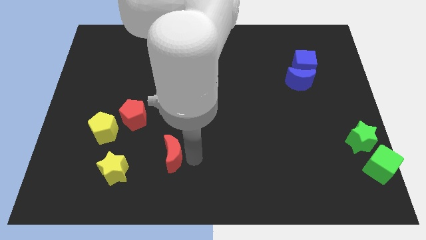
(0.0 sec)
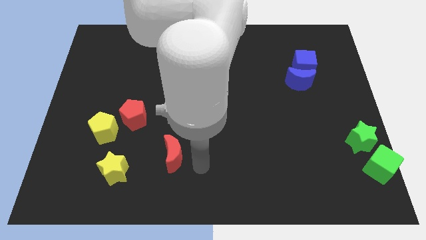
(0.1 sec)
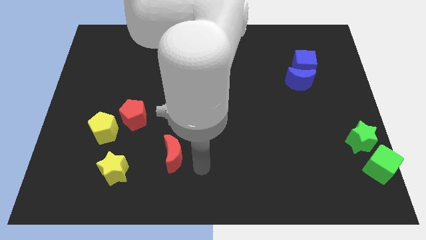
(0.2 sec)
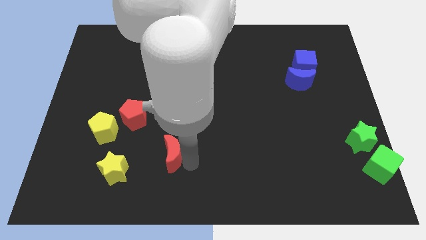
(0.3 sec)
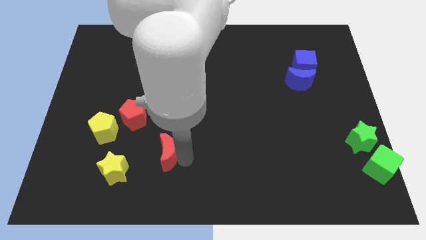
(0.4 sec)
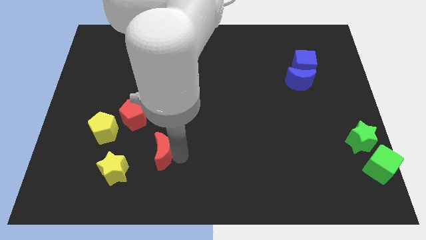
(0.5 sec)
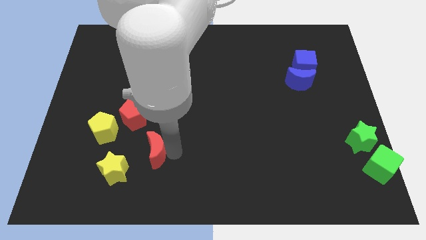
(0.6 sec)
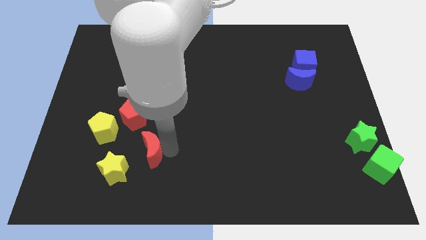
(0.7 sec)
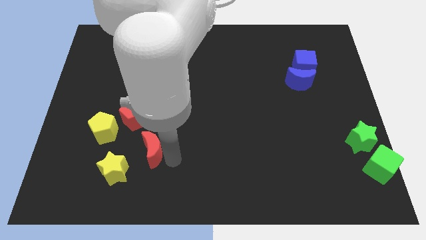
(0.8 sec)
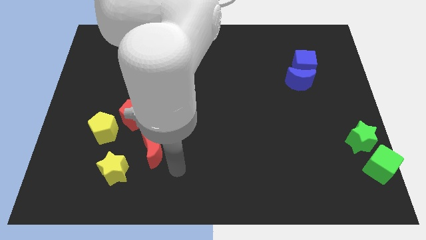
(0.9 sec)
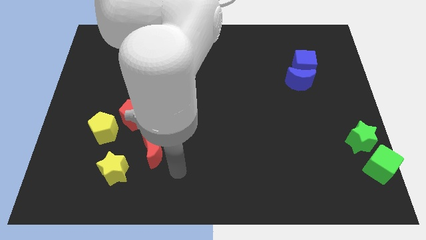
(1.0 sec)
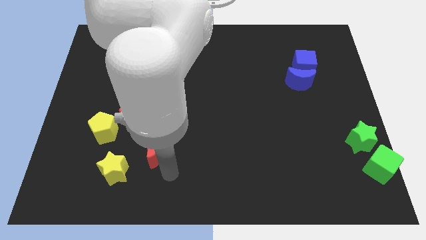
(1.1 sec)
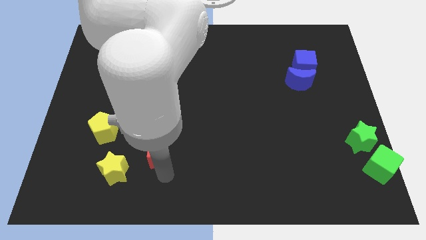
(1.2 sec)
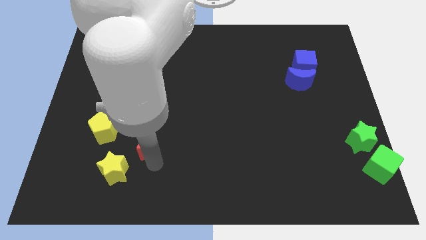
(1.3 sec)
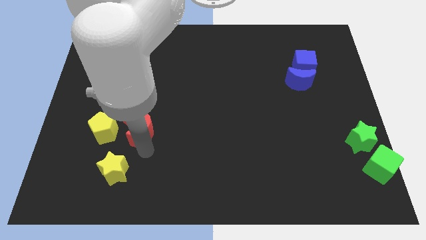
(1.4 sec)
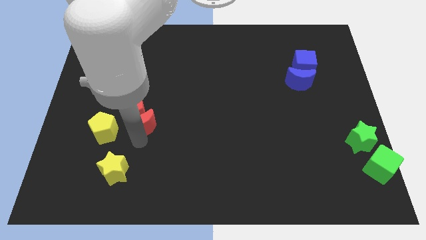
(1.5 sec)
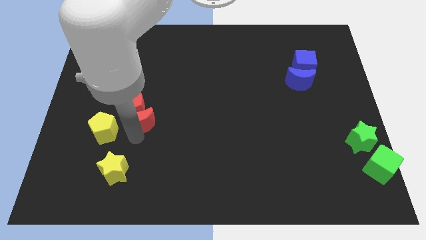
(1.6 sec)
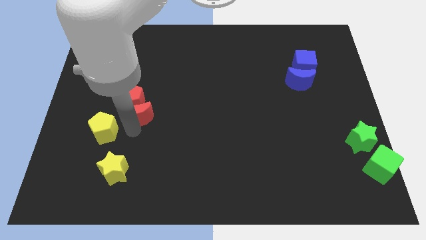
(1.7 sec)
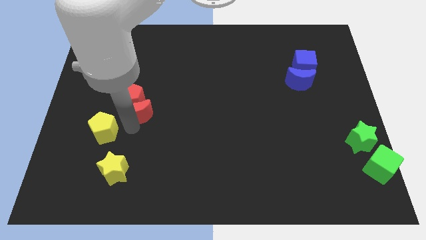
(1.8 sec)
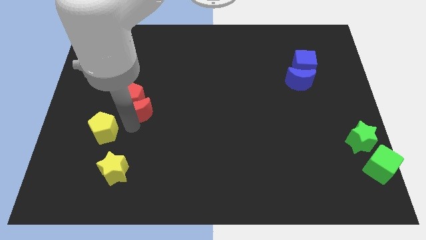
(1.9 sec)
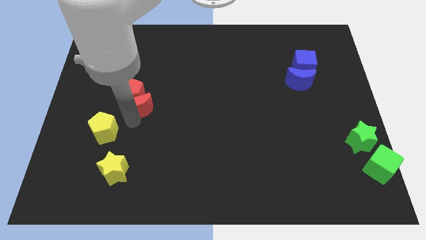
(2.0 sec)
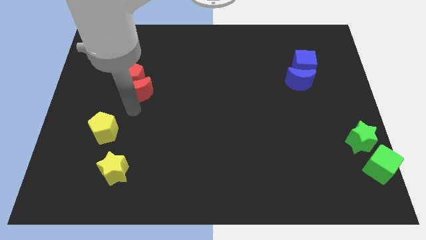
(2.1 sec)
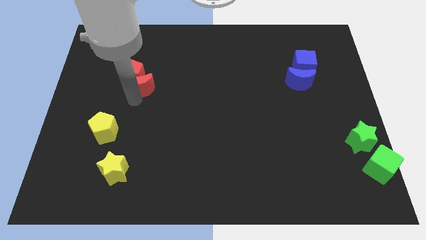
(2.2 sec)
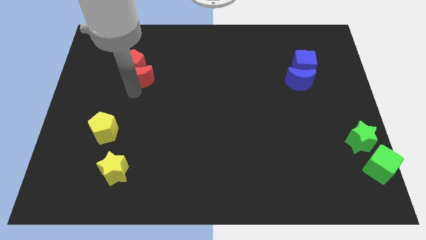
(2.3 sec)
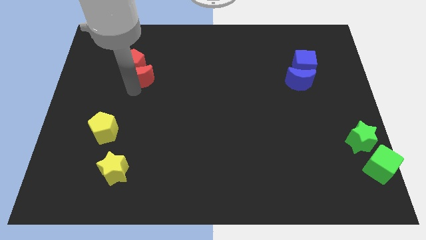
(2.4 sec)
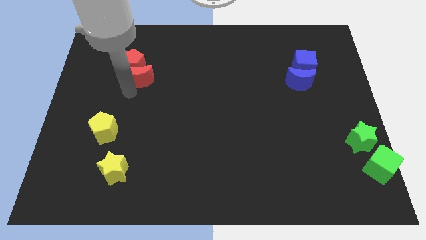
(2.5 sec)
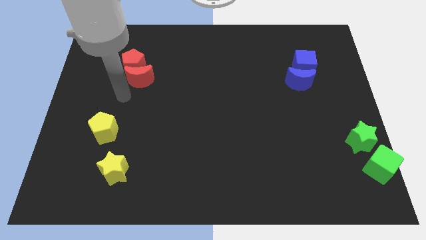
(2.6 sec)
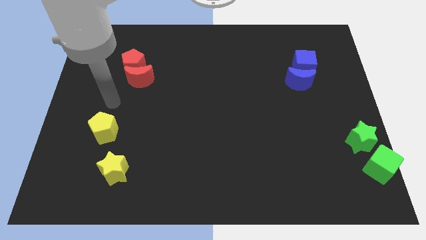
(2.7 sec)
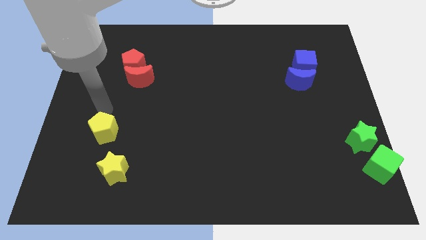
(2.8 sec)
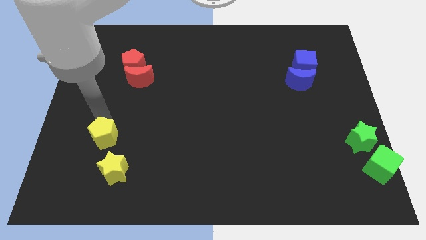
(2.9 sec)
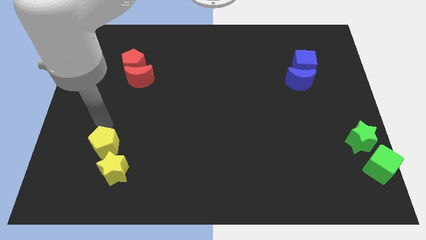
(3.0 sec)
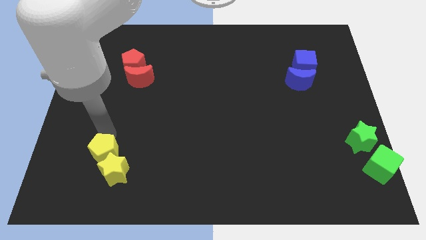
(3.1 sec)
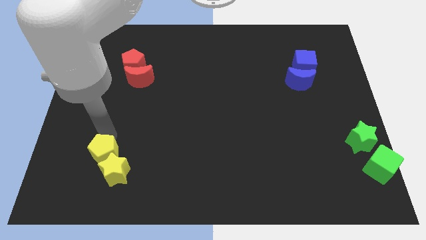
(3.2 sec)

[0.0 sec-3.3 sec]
push the red crescent into red pentagon

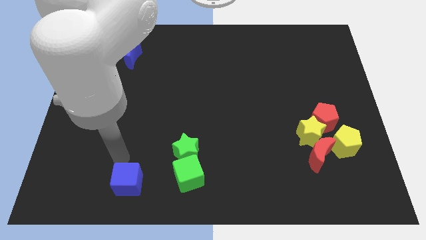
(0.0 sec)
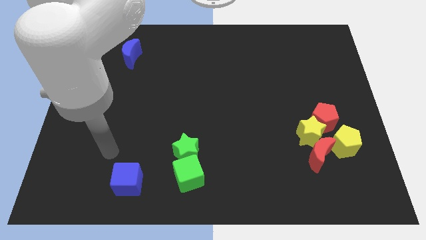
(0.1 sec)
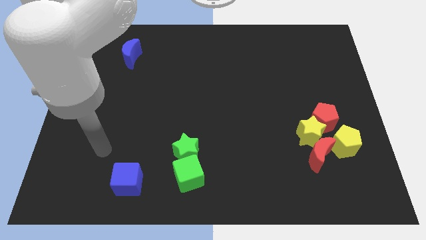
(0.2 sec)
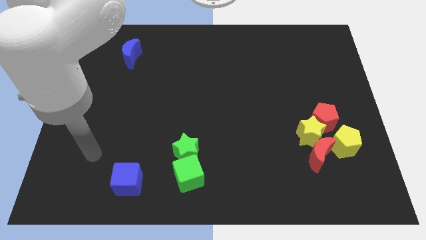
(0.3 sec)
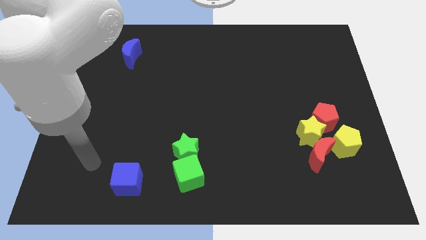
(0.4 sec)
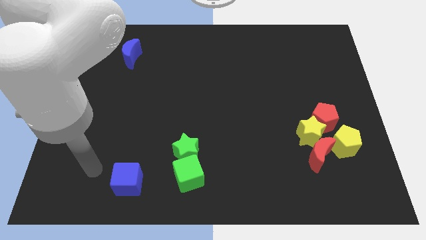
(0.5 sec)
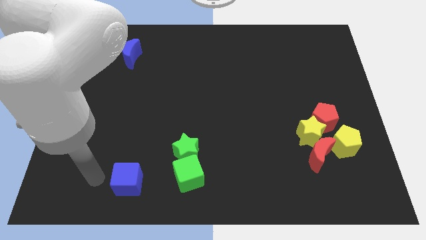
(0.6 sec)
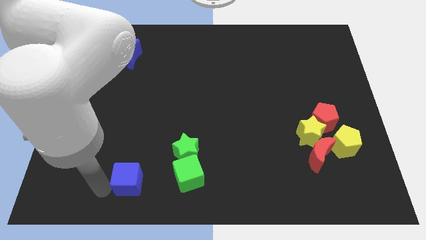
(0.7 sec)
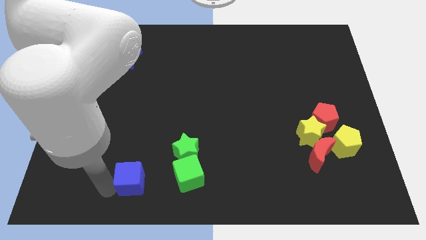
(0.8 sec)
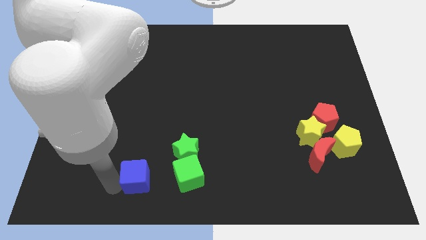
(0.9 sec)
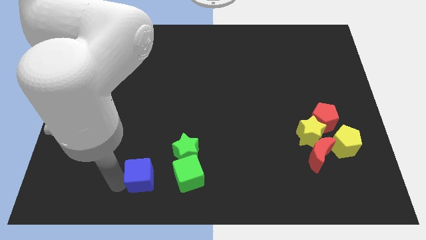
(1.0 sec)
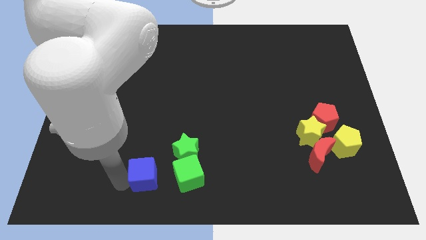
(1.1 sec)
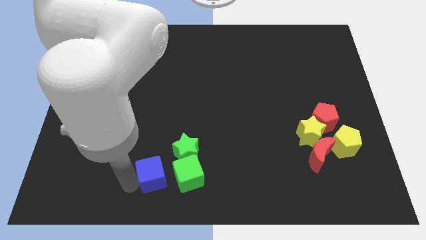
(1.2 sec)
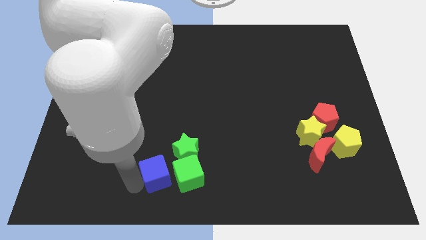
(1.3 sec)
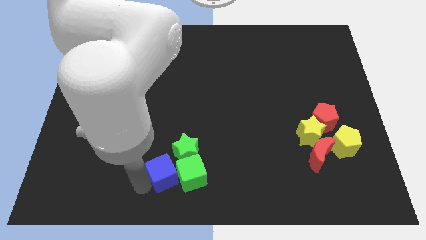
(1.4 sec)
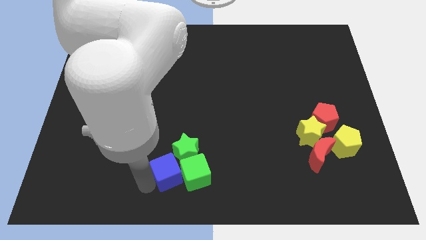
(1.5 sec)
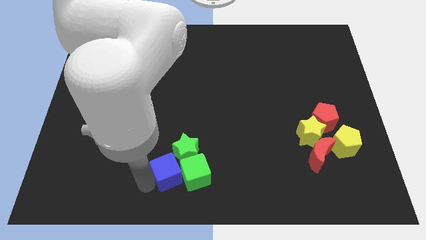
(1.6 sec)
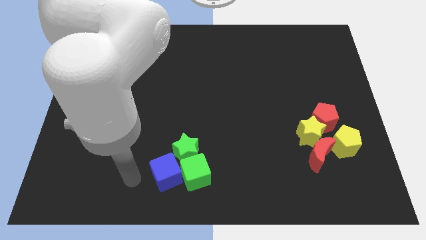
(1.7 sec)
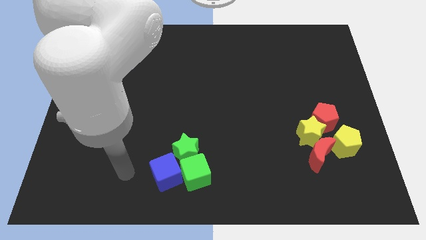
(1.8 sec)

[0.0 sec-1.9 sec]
slide the blue cube towards the bottom center

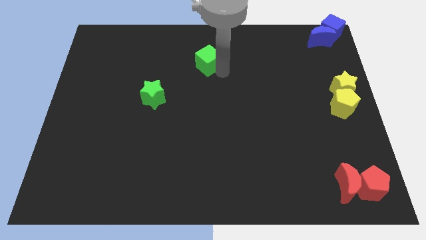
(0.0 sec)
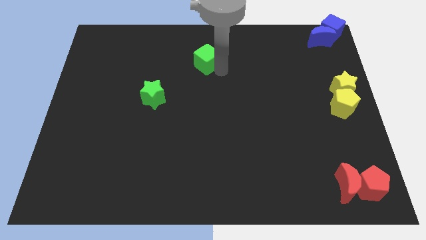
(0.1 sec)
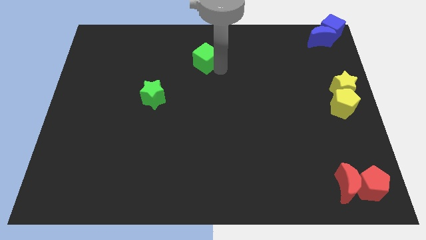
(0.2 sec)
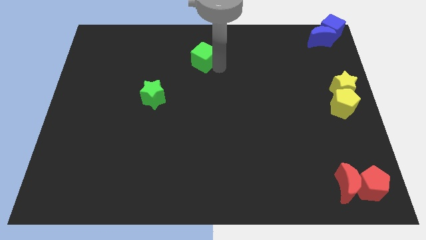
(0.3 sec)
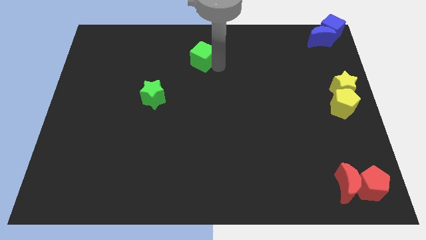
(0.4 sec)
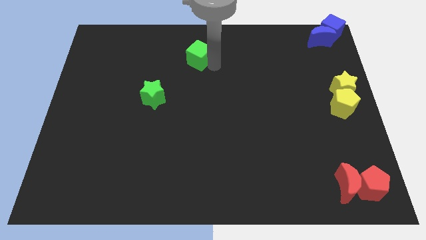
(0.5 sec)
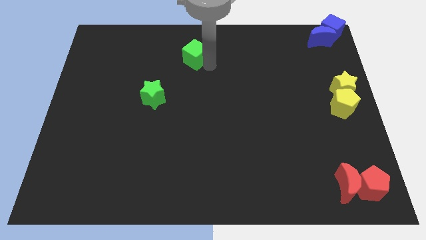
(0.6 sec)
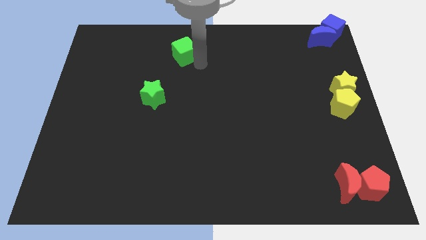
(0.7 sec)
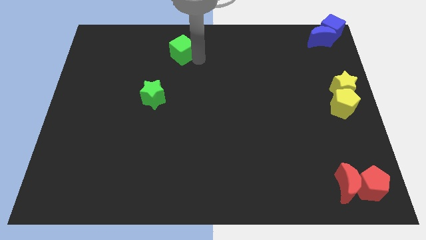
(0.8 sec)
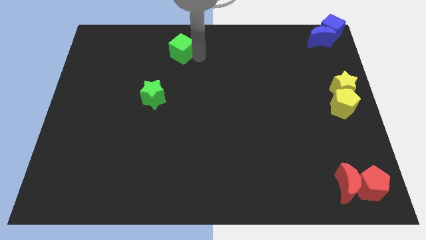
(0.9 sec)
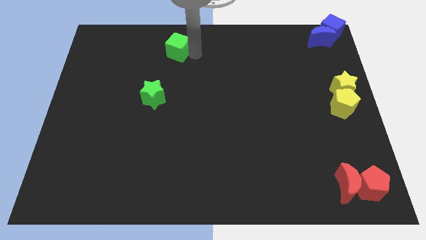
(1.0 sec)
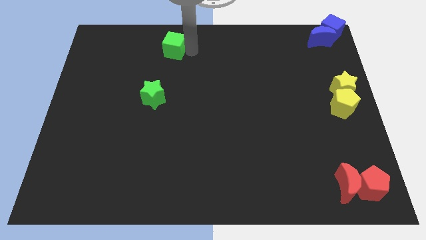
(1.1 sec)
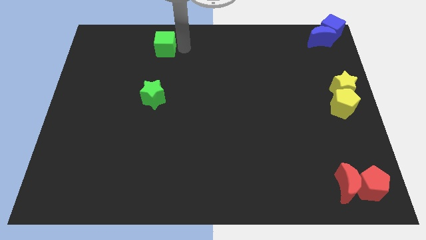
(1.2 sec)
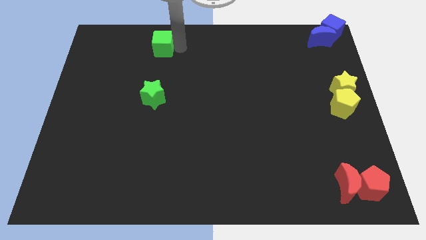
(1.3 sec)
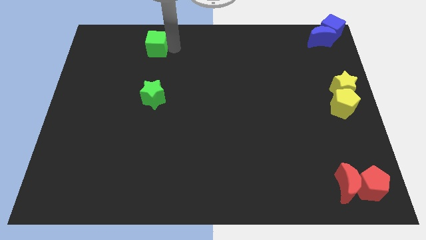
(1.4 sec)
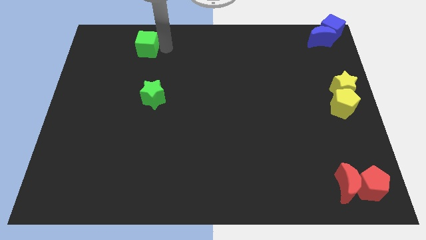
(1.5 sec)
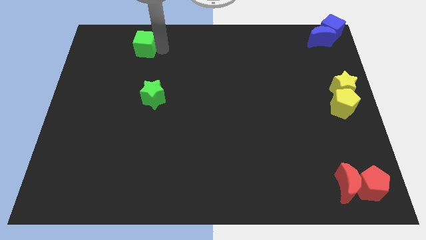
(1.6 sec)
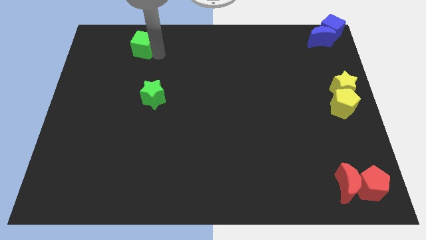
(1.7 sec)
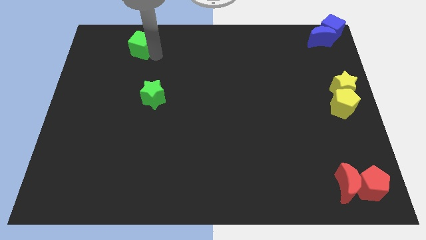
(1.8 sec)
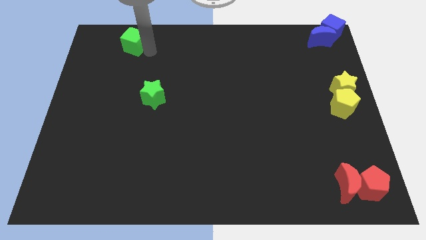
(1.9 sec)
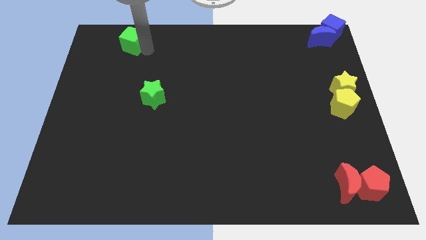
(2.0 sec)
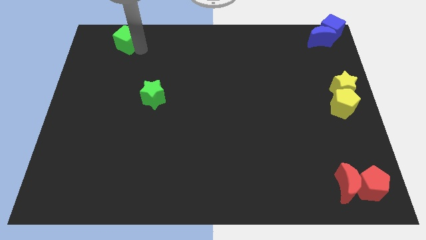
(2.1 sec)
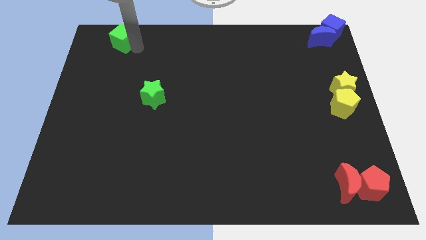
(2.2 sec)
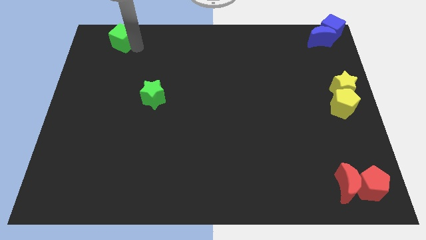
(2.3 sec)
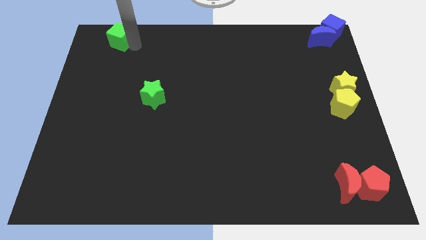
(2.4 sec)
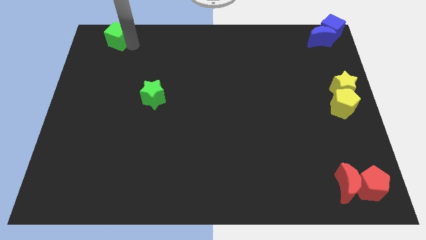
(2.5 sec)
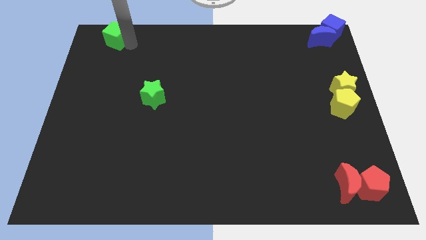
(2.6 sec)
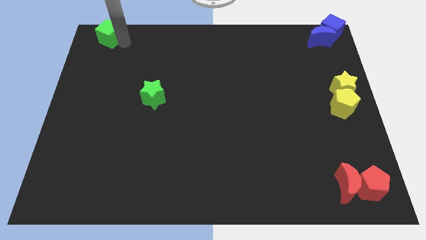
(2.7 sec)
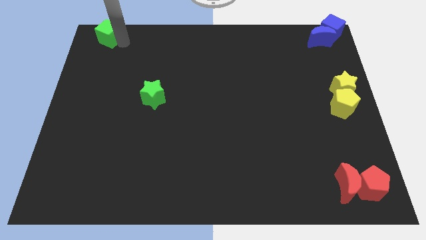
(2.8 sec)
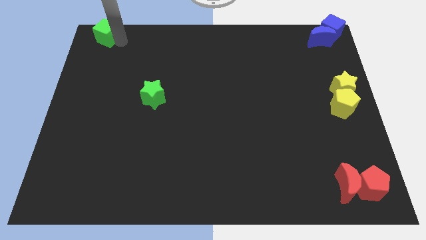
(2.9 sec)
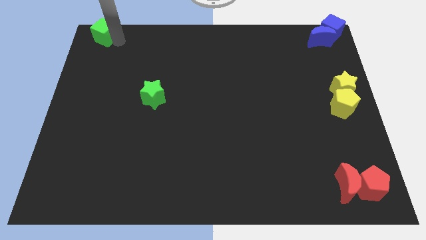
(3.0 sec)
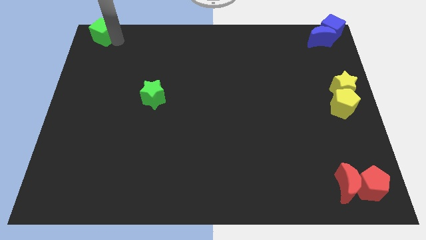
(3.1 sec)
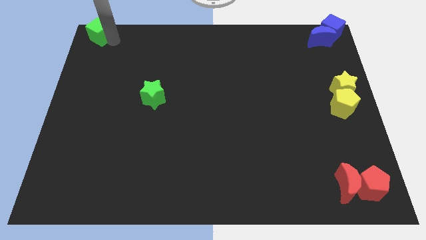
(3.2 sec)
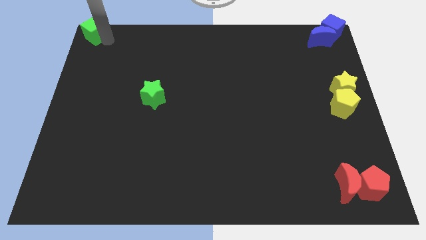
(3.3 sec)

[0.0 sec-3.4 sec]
place the green cube at top left side of the board

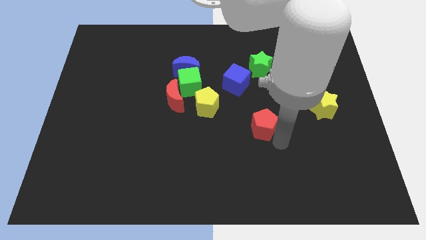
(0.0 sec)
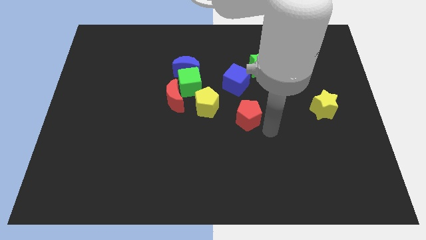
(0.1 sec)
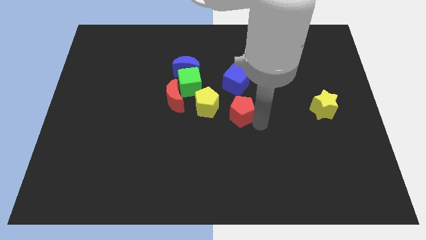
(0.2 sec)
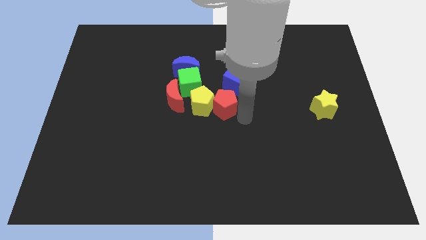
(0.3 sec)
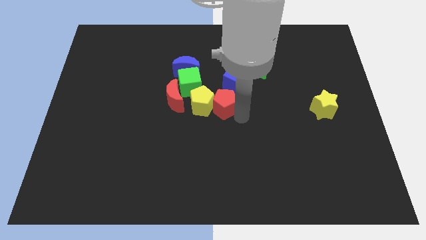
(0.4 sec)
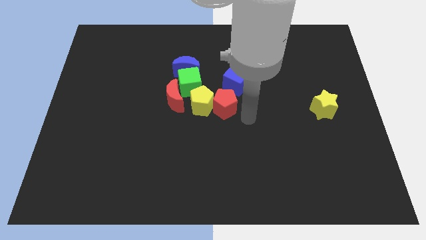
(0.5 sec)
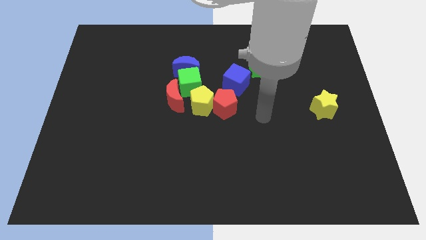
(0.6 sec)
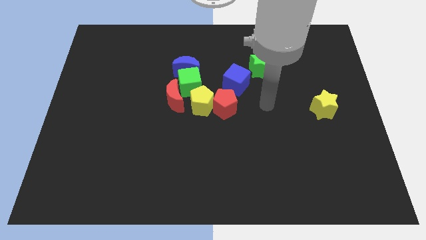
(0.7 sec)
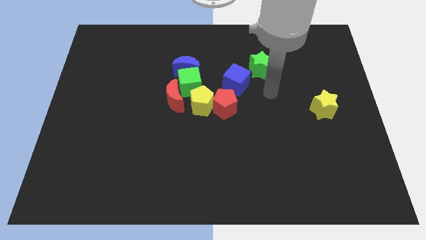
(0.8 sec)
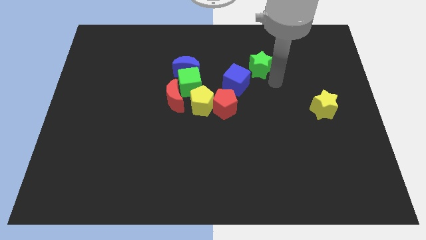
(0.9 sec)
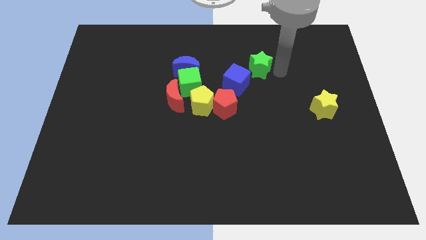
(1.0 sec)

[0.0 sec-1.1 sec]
place the red pentagon close to blue cube
